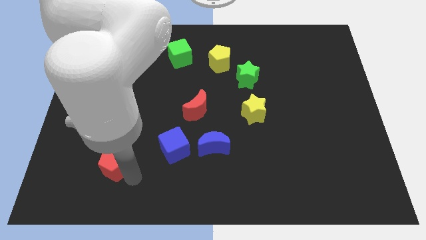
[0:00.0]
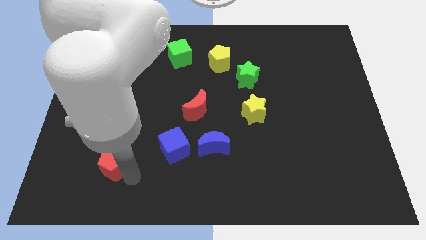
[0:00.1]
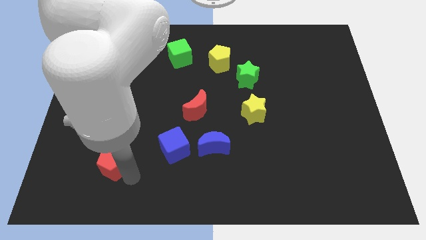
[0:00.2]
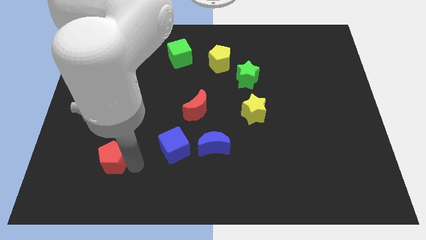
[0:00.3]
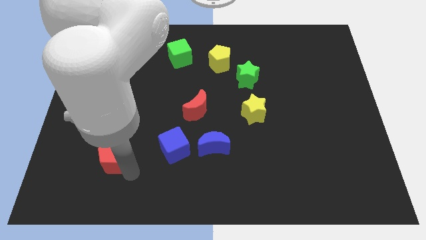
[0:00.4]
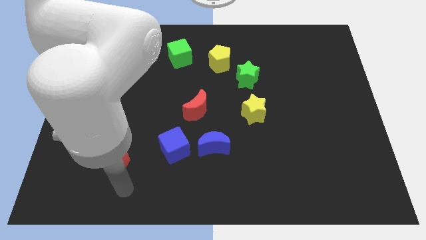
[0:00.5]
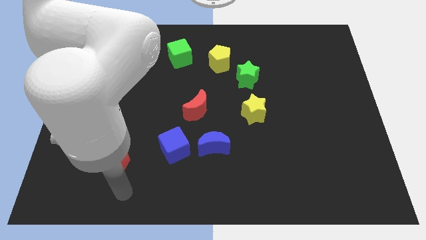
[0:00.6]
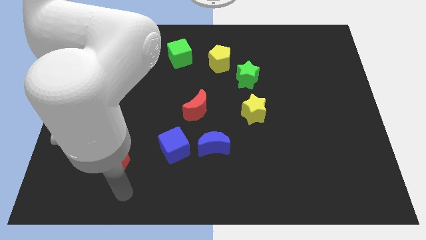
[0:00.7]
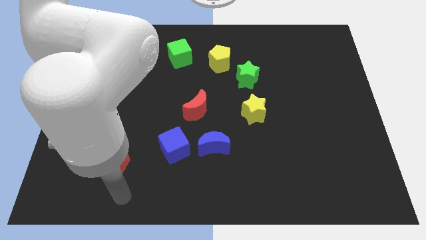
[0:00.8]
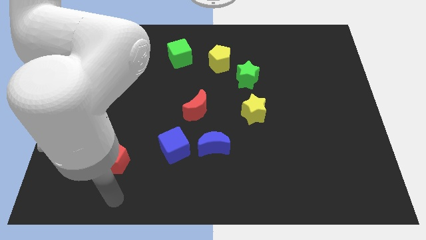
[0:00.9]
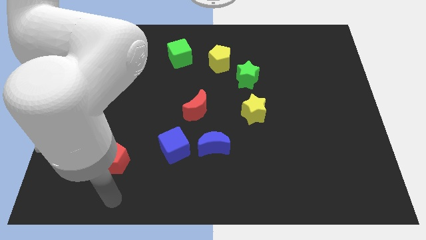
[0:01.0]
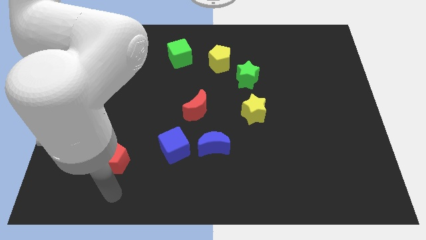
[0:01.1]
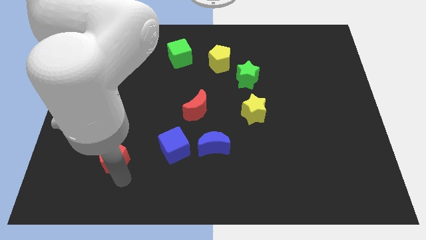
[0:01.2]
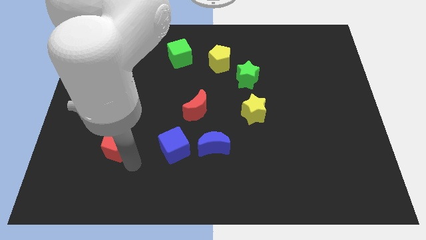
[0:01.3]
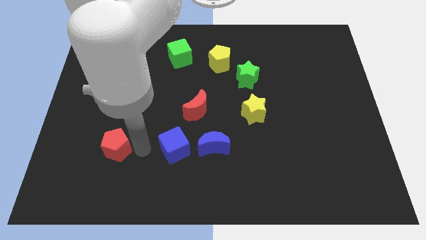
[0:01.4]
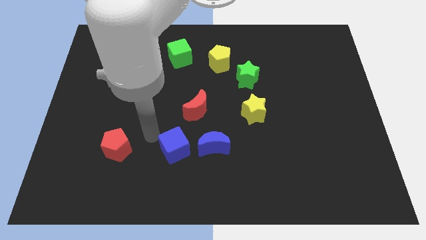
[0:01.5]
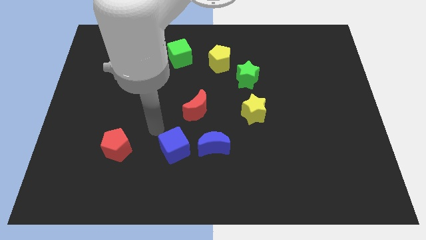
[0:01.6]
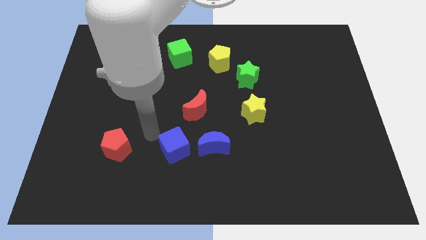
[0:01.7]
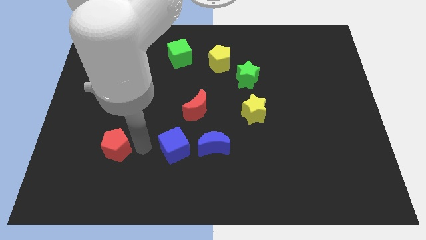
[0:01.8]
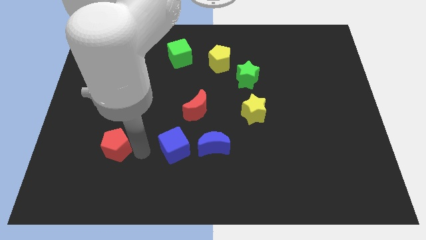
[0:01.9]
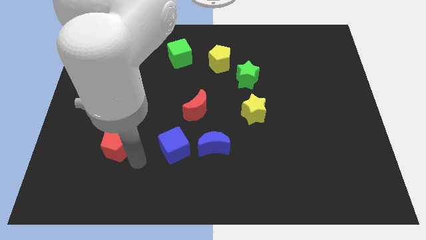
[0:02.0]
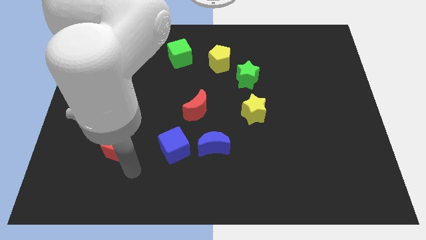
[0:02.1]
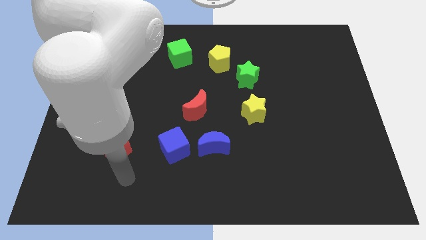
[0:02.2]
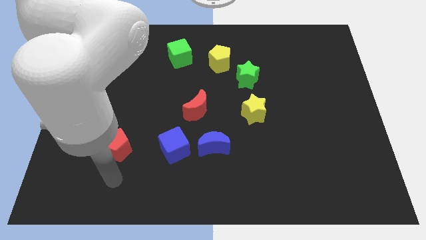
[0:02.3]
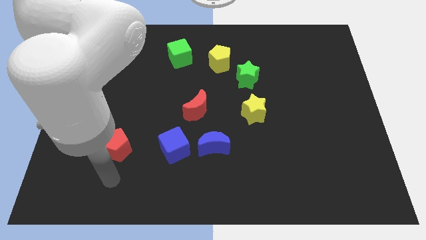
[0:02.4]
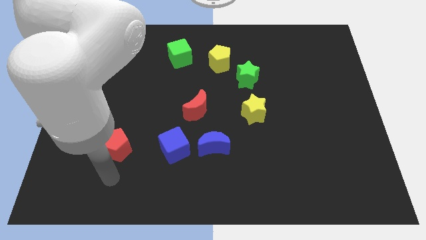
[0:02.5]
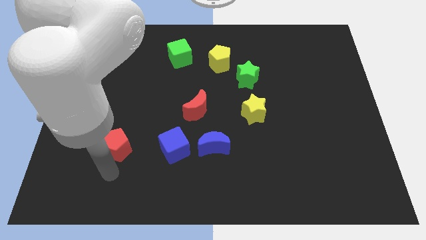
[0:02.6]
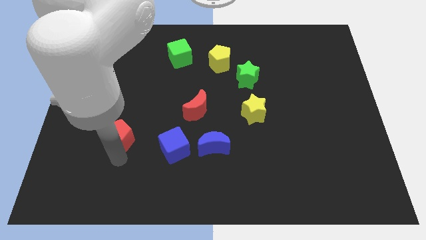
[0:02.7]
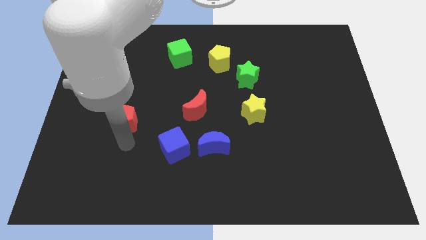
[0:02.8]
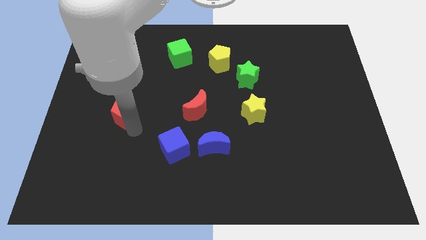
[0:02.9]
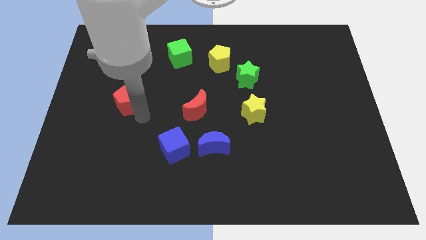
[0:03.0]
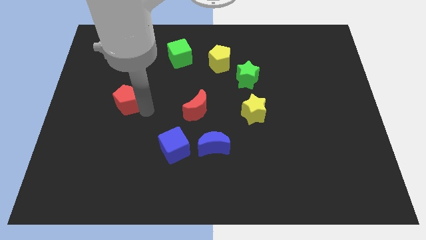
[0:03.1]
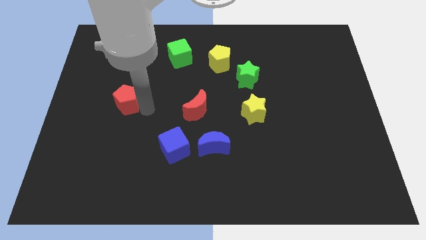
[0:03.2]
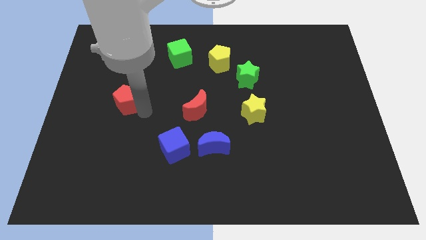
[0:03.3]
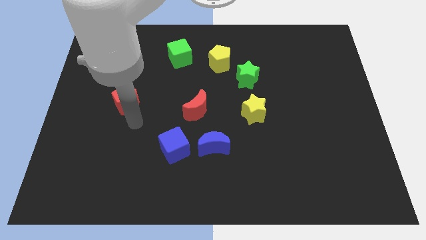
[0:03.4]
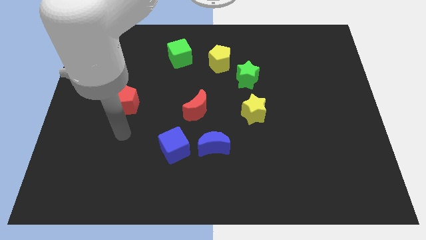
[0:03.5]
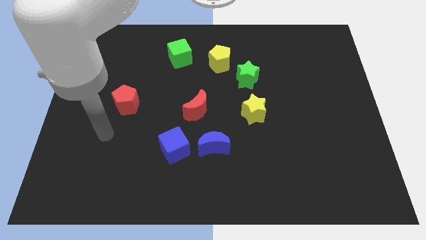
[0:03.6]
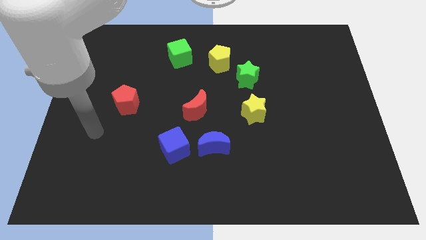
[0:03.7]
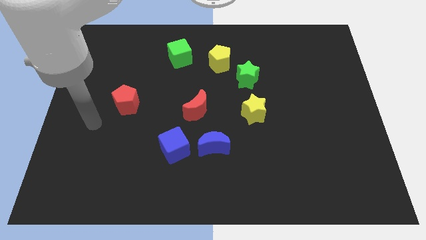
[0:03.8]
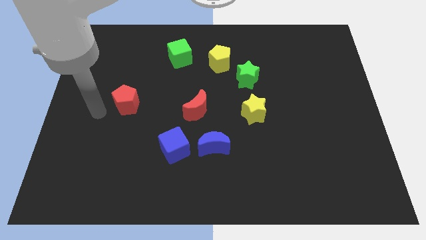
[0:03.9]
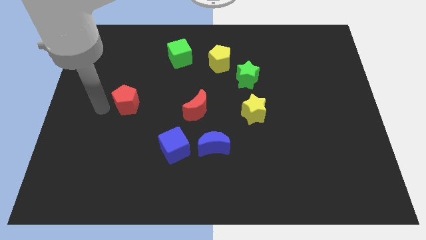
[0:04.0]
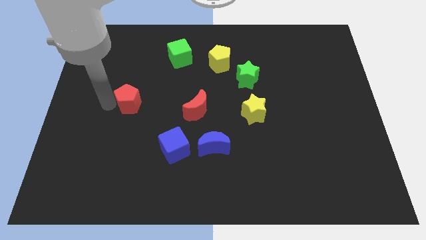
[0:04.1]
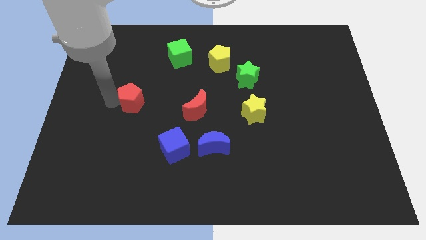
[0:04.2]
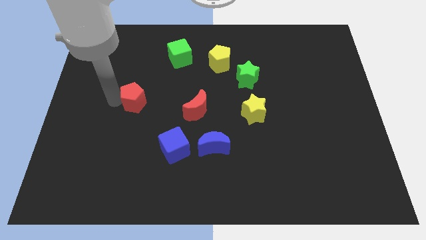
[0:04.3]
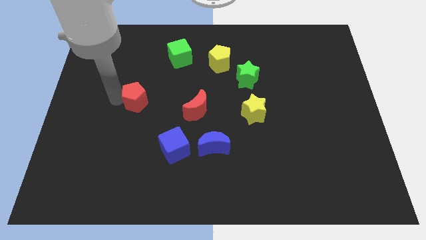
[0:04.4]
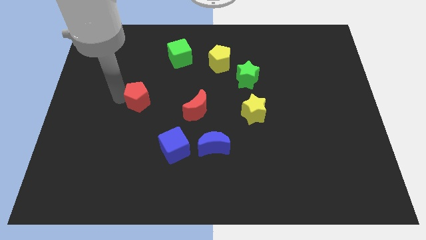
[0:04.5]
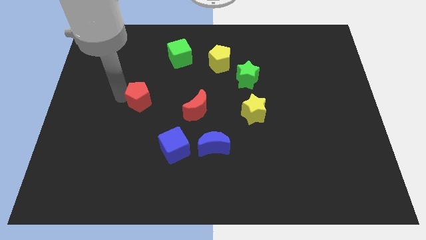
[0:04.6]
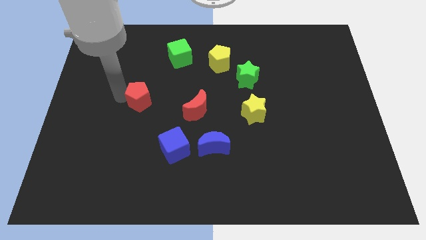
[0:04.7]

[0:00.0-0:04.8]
place the red pentagon on the top left of the blue cube diagonally

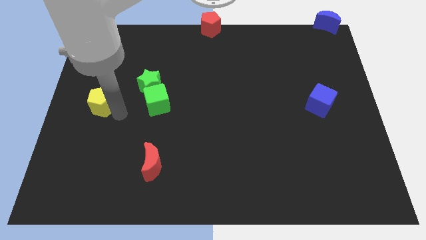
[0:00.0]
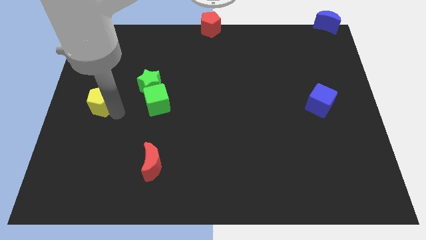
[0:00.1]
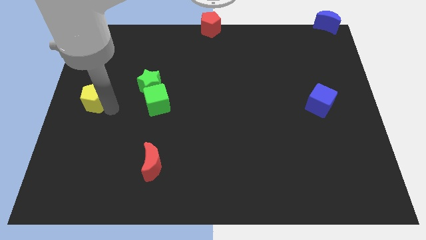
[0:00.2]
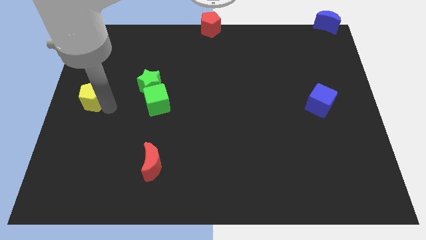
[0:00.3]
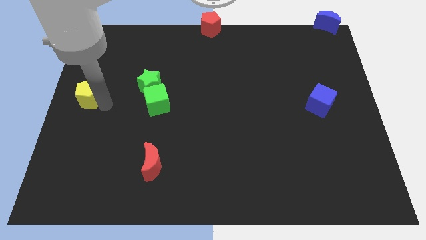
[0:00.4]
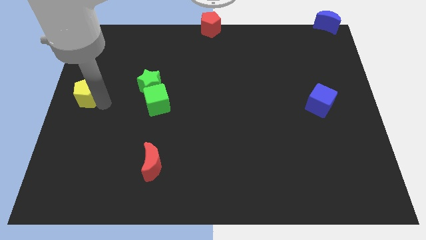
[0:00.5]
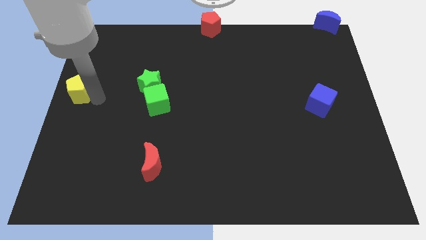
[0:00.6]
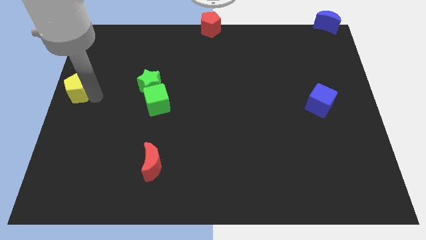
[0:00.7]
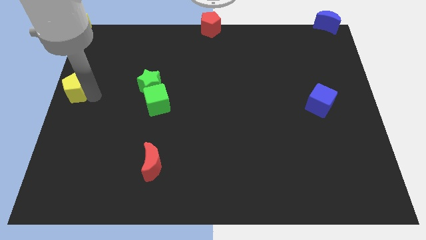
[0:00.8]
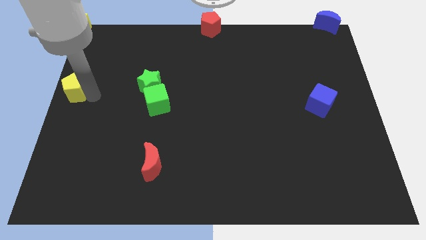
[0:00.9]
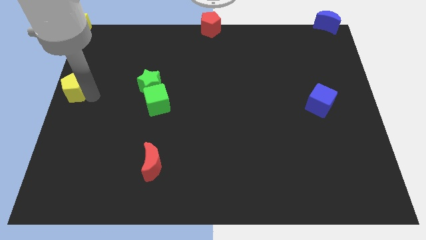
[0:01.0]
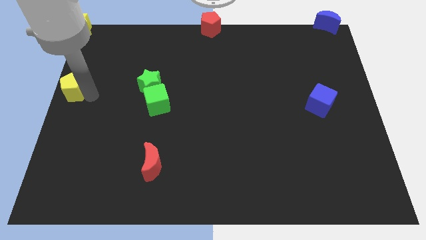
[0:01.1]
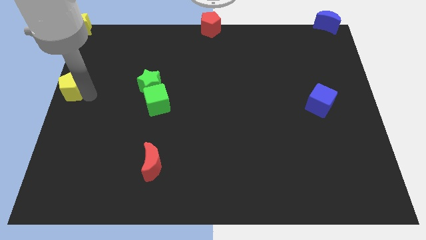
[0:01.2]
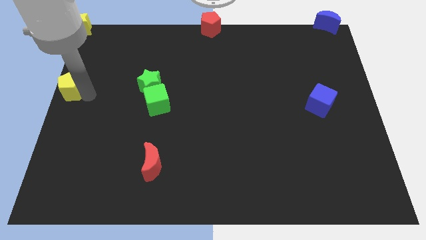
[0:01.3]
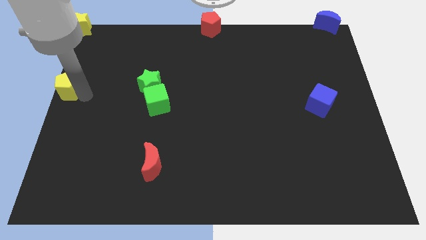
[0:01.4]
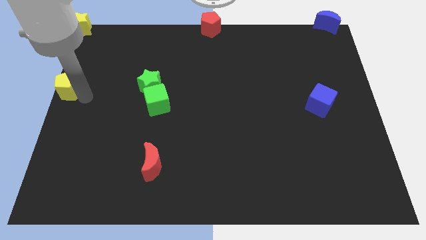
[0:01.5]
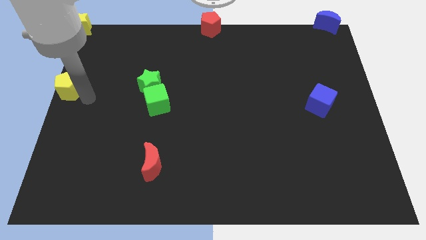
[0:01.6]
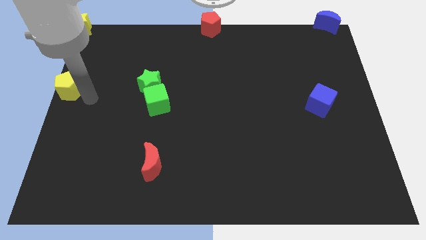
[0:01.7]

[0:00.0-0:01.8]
put the yellow pentagon vertically at the bottom side of the yellow star

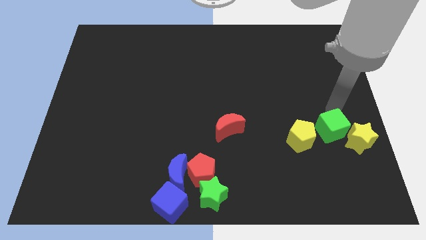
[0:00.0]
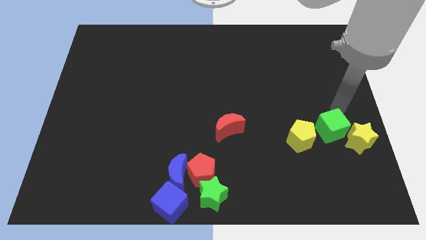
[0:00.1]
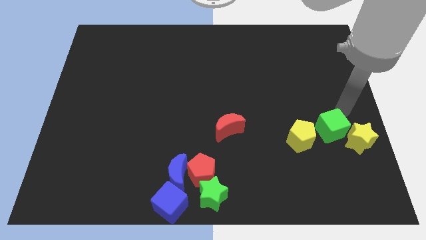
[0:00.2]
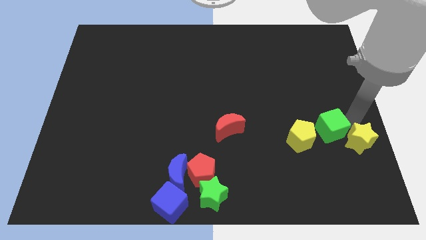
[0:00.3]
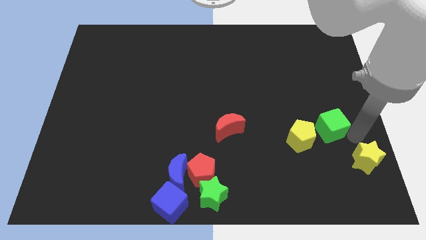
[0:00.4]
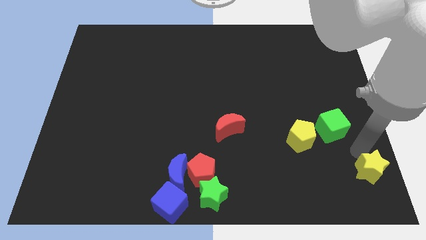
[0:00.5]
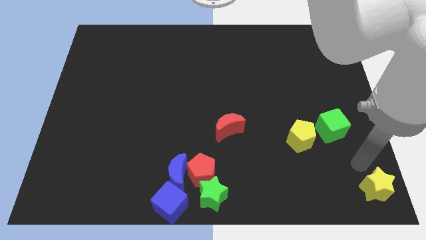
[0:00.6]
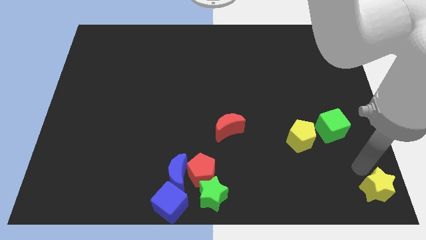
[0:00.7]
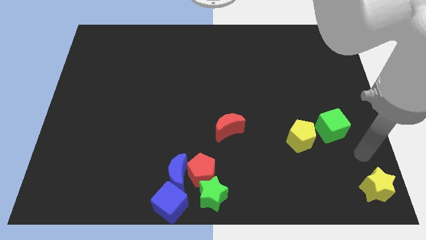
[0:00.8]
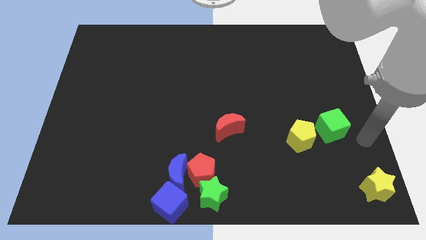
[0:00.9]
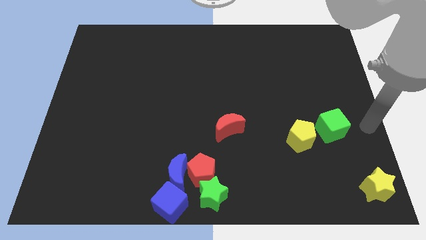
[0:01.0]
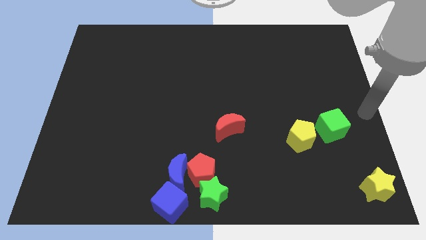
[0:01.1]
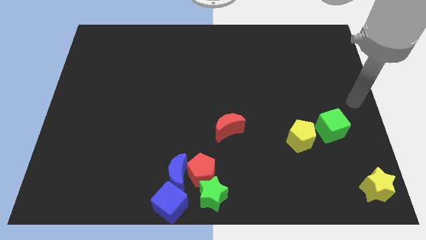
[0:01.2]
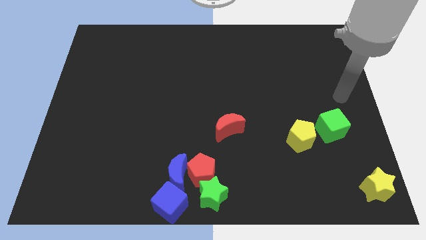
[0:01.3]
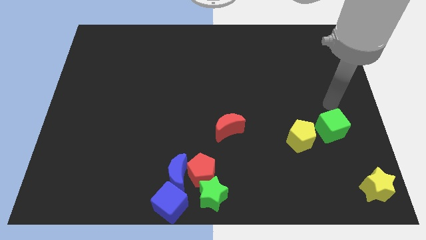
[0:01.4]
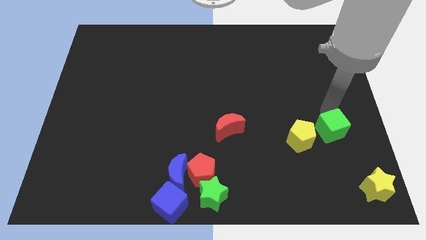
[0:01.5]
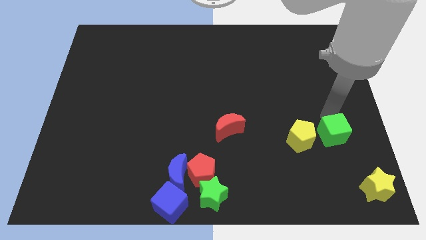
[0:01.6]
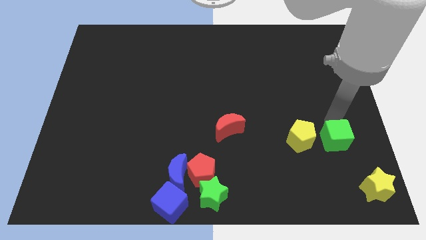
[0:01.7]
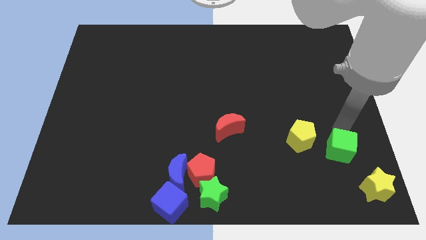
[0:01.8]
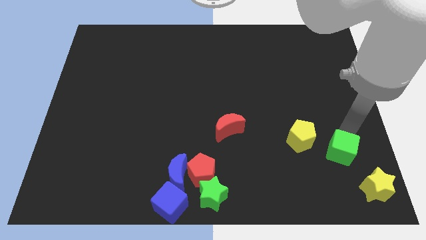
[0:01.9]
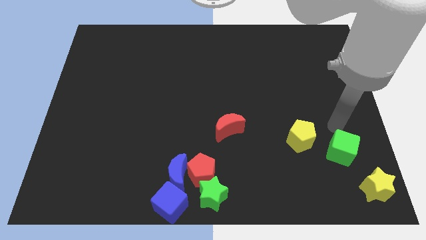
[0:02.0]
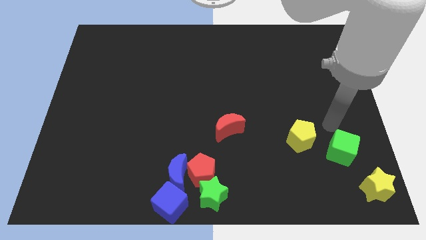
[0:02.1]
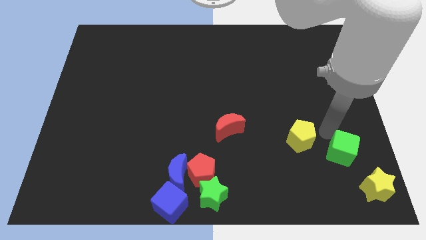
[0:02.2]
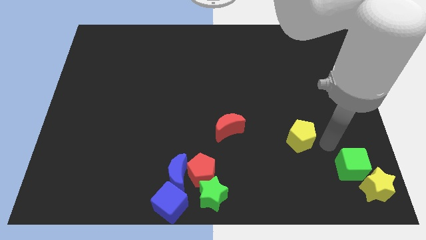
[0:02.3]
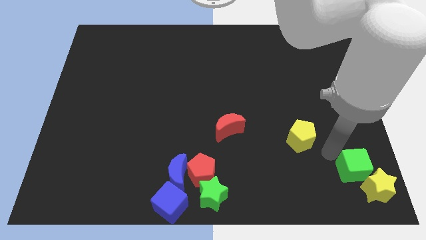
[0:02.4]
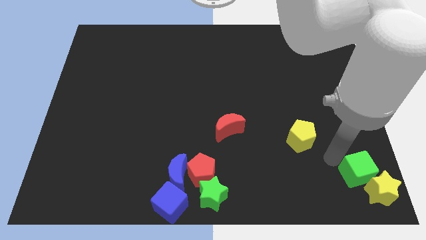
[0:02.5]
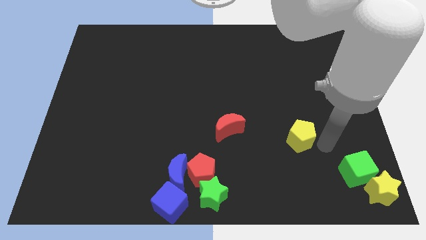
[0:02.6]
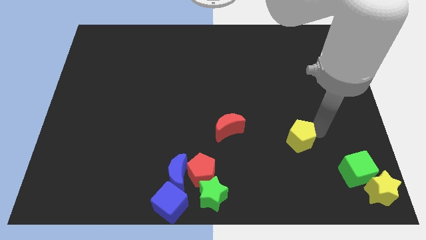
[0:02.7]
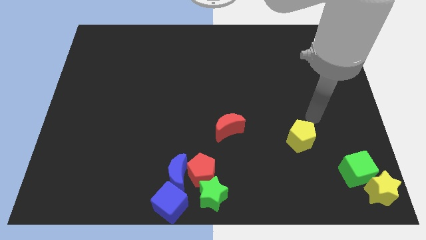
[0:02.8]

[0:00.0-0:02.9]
move the yellow star along with green cube to the bottom right of the board
